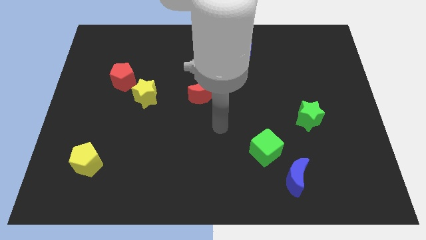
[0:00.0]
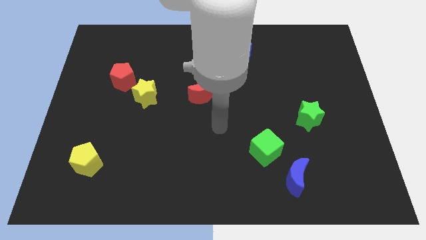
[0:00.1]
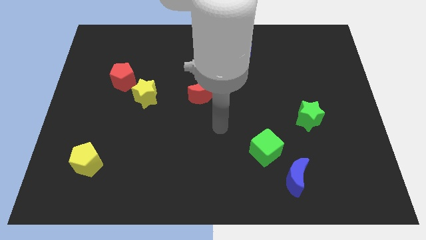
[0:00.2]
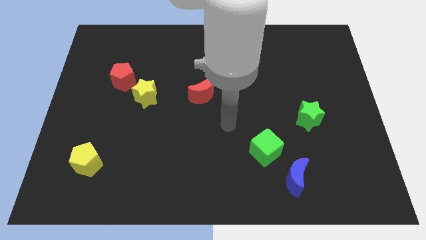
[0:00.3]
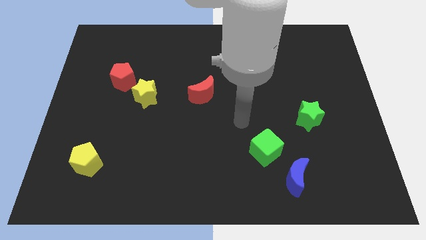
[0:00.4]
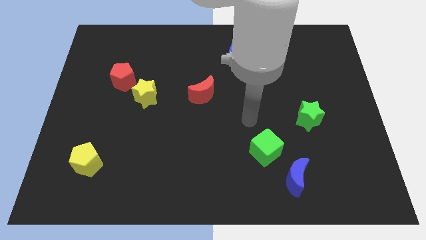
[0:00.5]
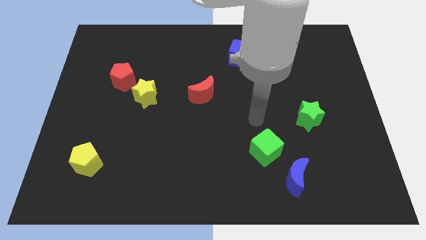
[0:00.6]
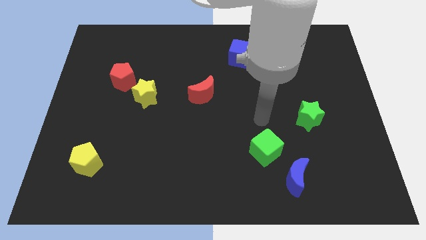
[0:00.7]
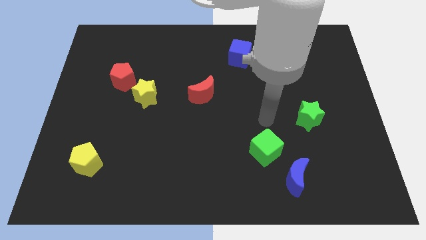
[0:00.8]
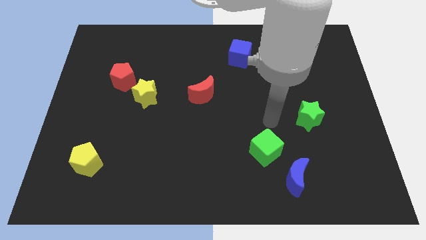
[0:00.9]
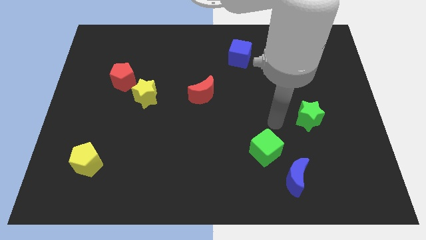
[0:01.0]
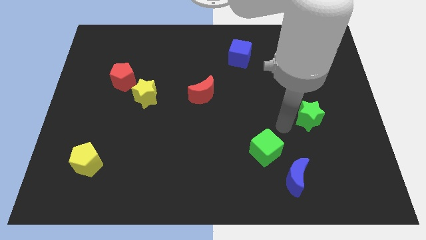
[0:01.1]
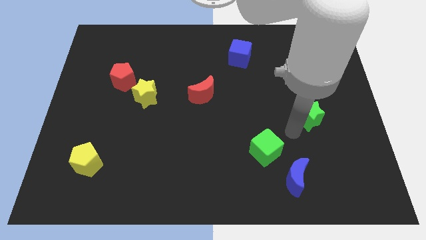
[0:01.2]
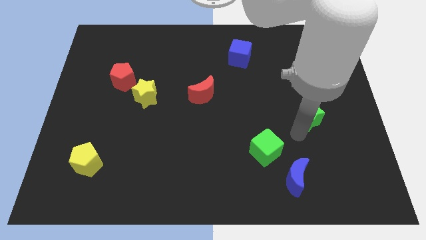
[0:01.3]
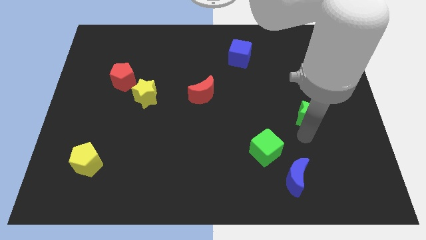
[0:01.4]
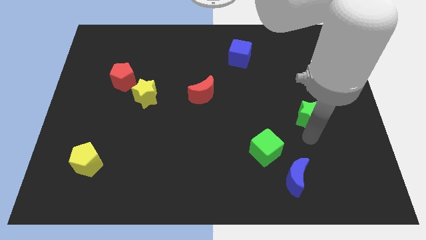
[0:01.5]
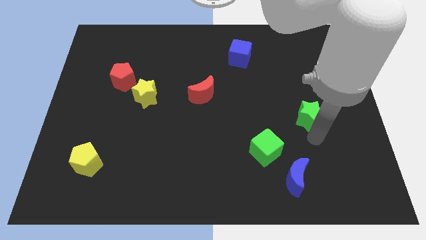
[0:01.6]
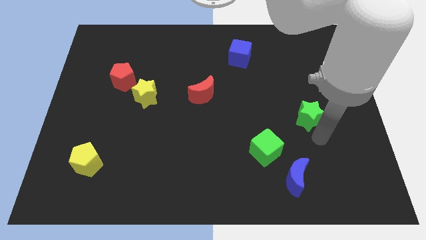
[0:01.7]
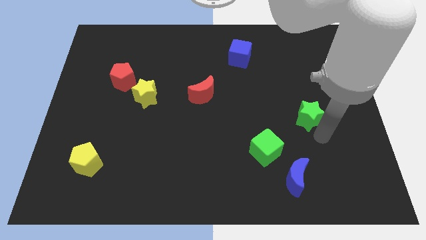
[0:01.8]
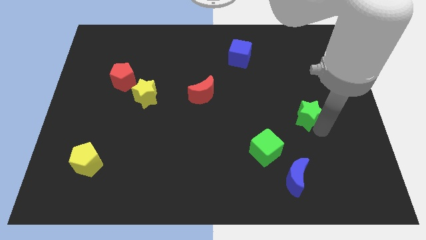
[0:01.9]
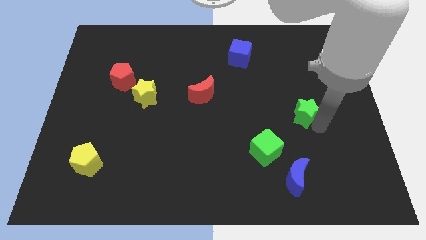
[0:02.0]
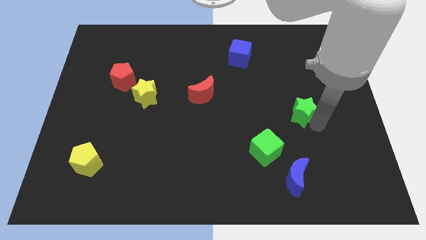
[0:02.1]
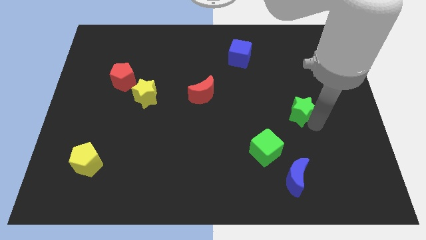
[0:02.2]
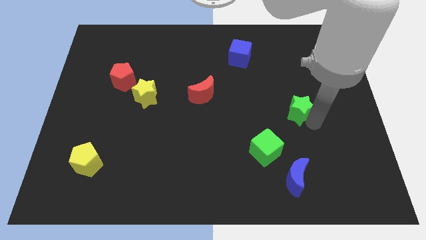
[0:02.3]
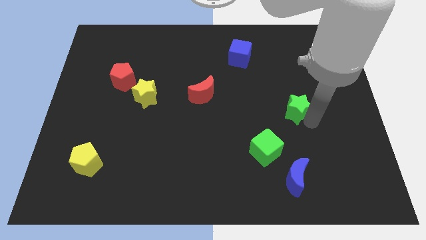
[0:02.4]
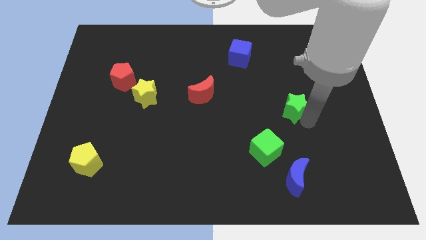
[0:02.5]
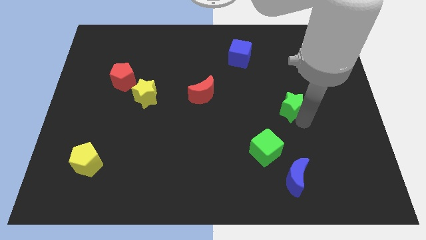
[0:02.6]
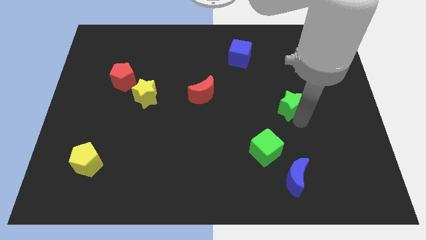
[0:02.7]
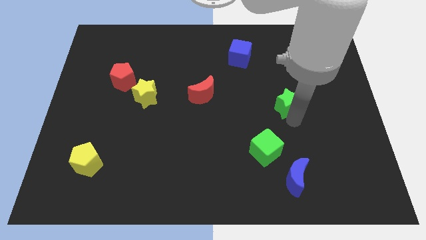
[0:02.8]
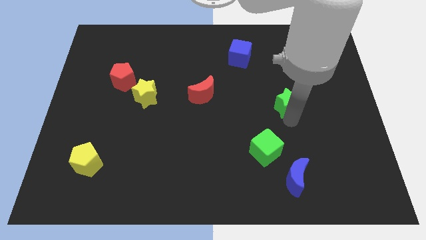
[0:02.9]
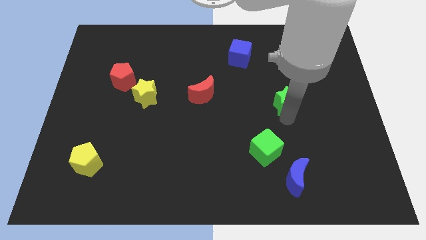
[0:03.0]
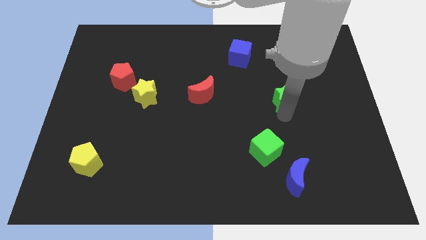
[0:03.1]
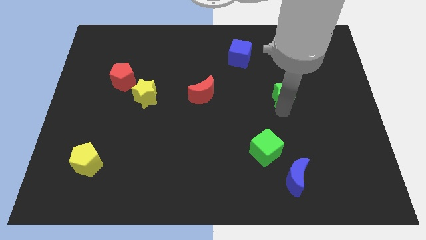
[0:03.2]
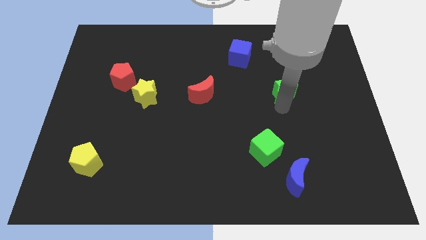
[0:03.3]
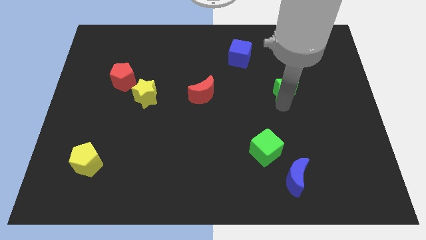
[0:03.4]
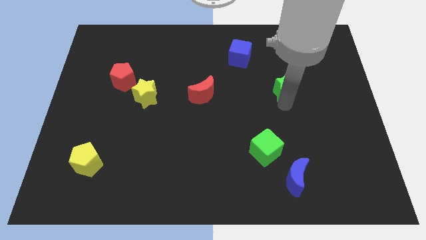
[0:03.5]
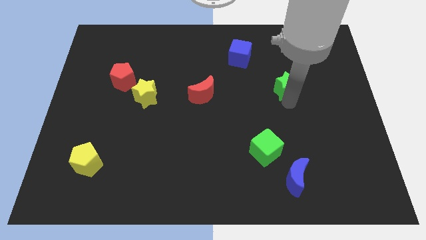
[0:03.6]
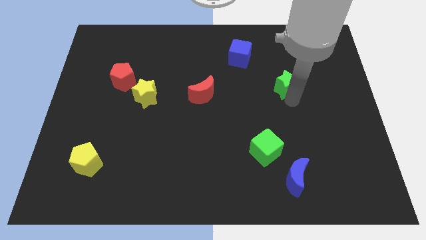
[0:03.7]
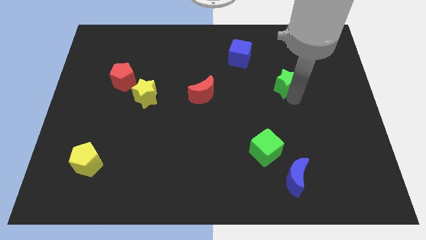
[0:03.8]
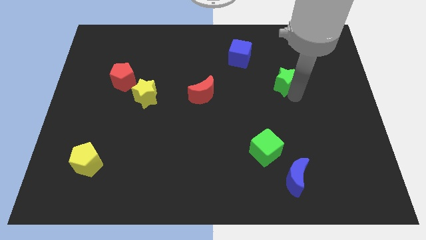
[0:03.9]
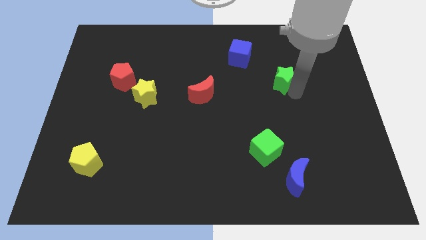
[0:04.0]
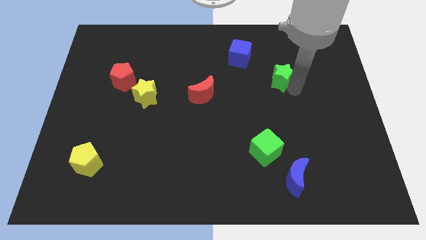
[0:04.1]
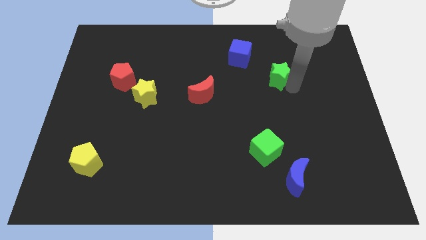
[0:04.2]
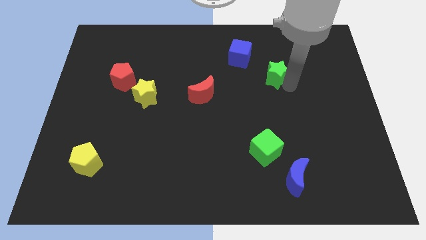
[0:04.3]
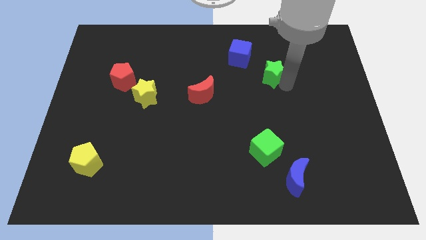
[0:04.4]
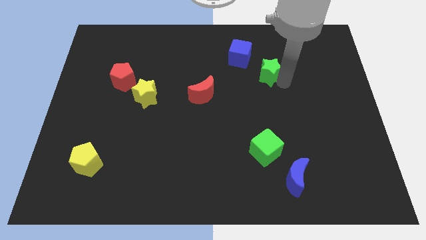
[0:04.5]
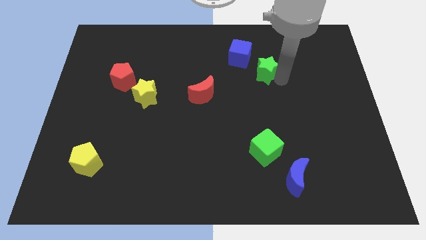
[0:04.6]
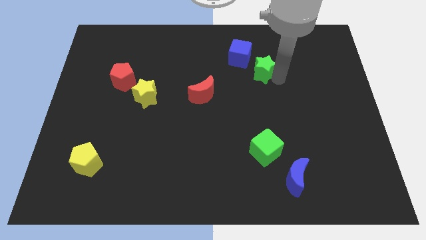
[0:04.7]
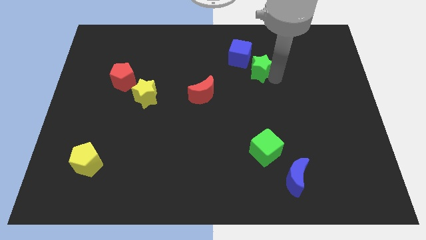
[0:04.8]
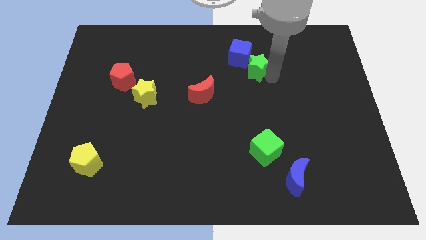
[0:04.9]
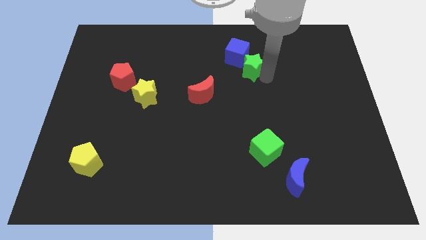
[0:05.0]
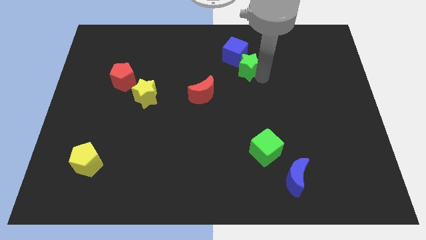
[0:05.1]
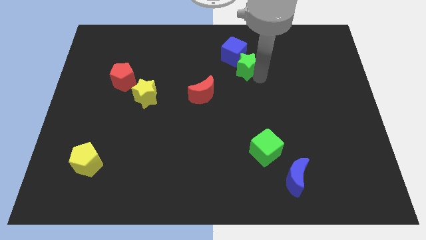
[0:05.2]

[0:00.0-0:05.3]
slide the green star close to the blue cube

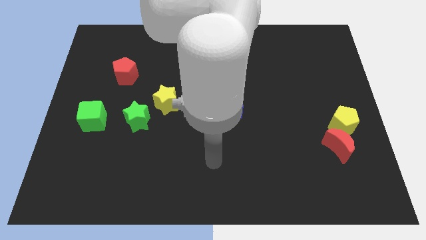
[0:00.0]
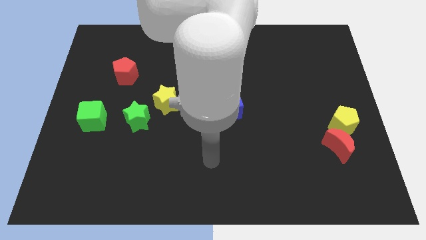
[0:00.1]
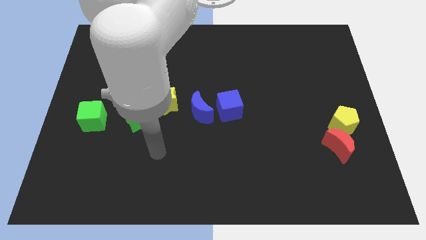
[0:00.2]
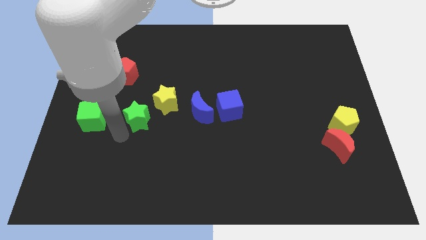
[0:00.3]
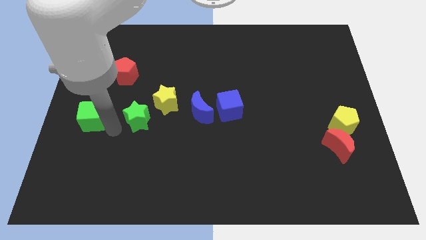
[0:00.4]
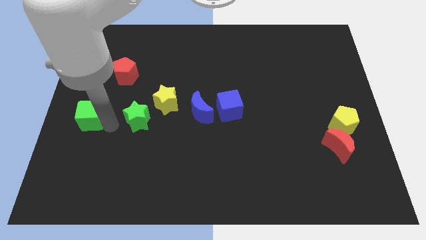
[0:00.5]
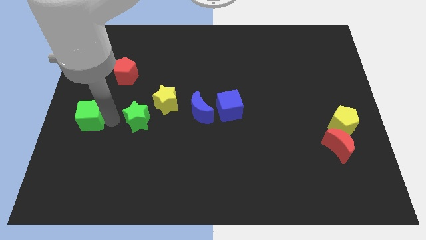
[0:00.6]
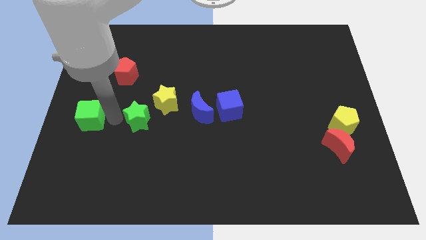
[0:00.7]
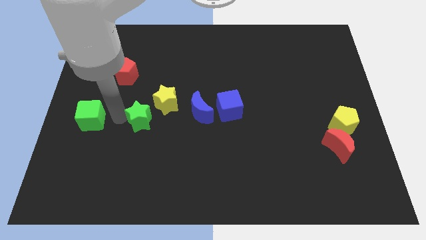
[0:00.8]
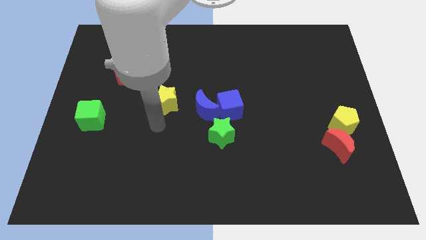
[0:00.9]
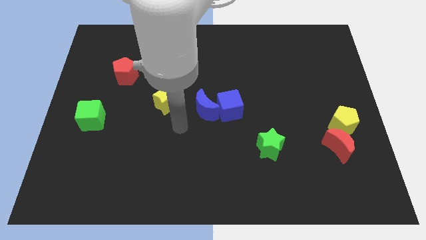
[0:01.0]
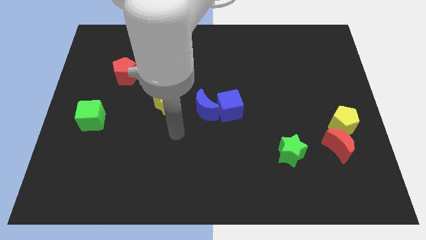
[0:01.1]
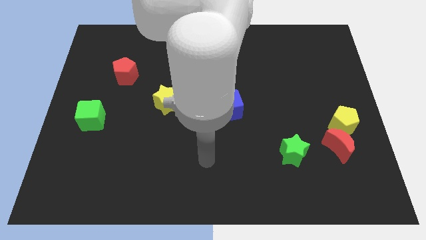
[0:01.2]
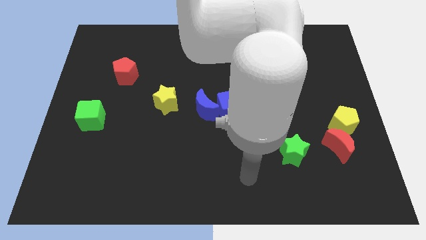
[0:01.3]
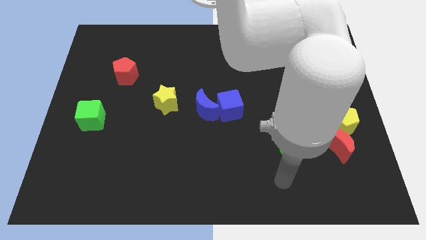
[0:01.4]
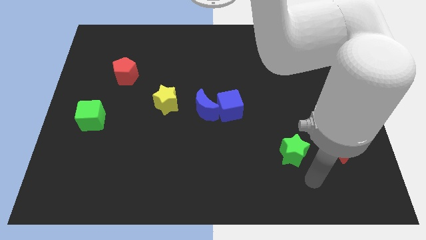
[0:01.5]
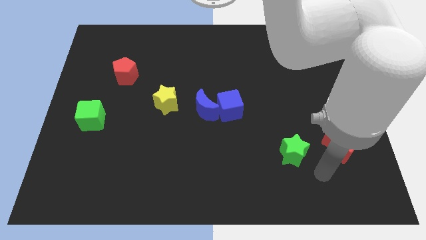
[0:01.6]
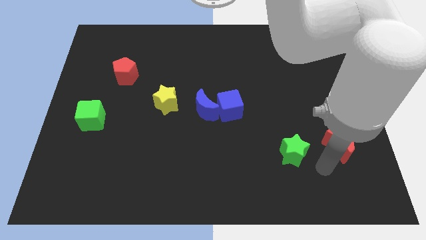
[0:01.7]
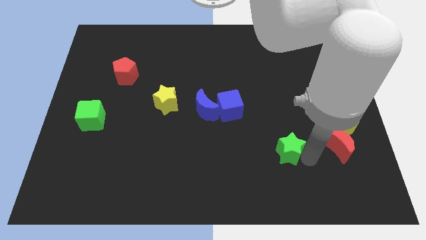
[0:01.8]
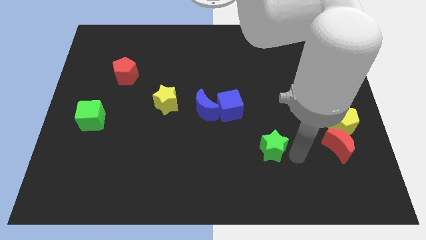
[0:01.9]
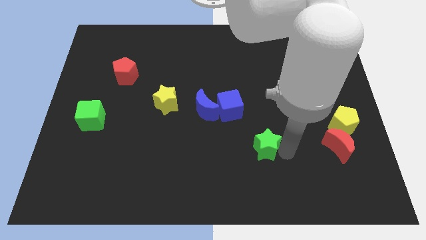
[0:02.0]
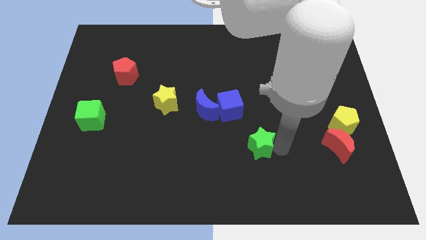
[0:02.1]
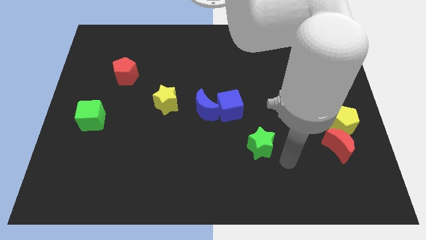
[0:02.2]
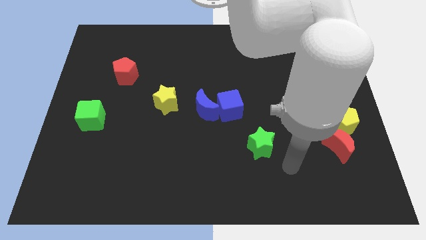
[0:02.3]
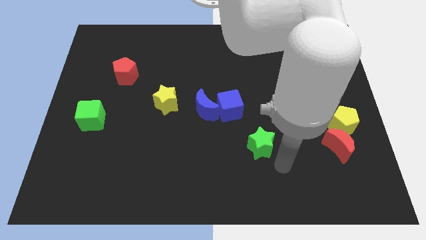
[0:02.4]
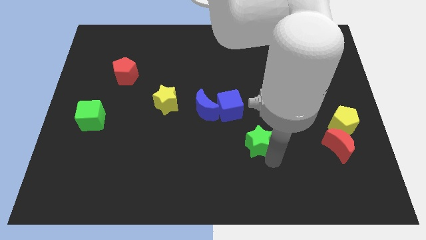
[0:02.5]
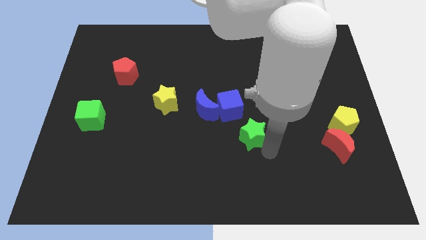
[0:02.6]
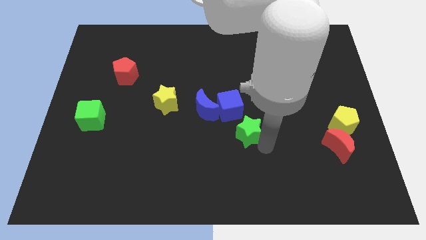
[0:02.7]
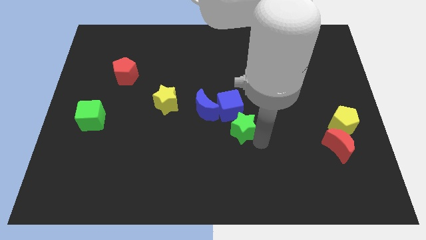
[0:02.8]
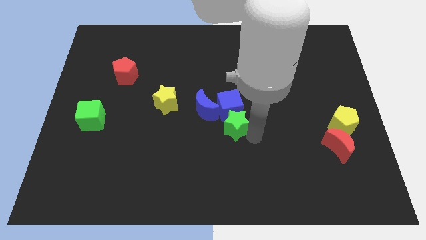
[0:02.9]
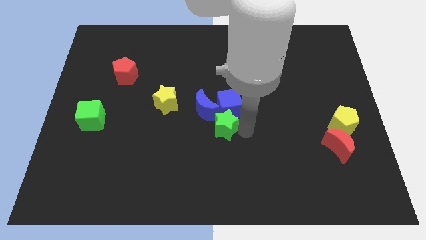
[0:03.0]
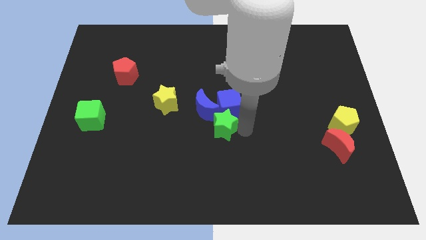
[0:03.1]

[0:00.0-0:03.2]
push the green star close to the blue cube
